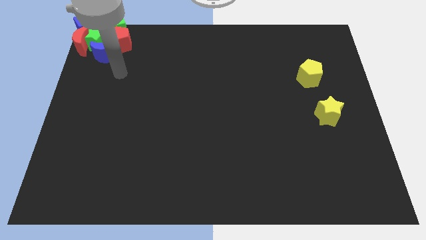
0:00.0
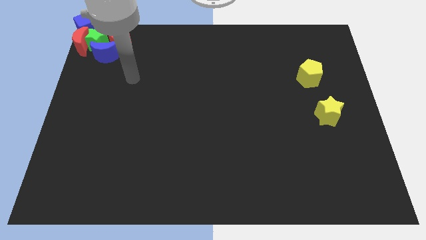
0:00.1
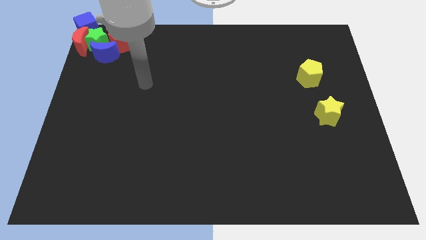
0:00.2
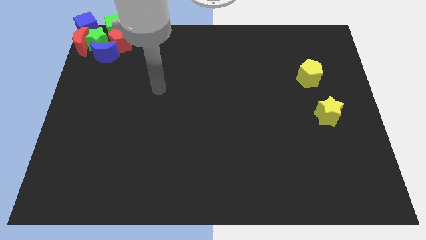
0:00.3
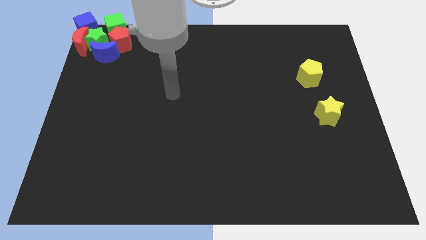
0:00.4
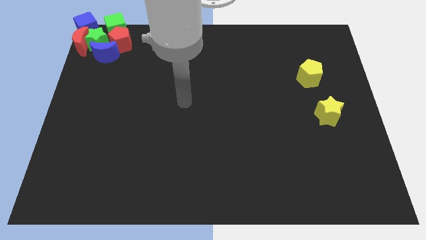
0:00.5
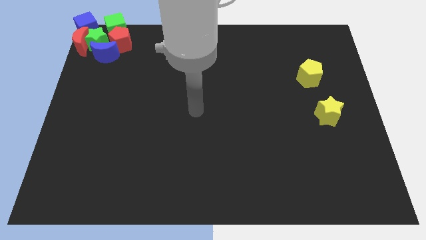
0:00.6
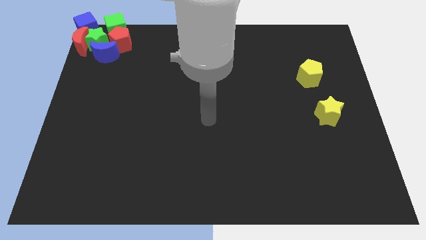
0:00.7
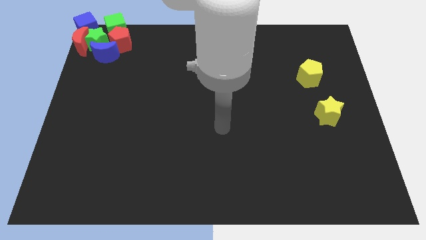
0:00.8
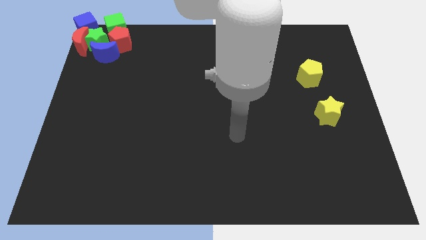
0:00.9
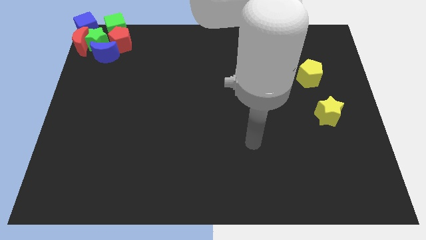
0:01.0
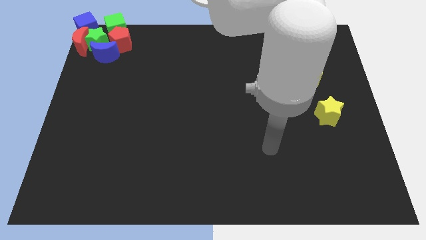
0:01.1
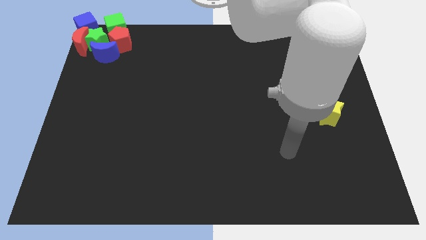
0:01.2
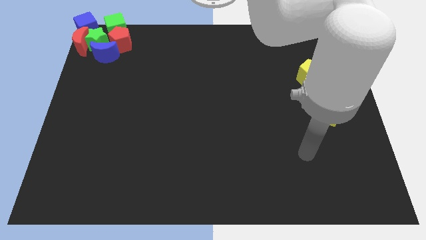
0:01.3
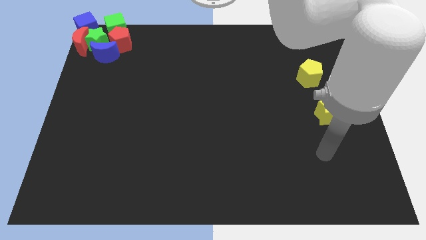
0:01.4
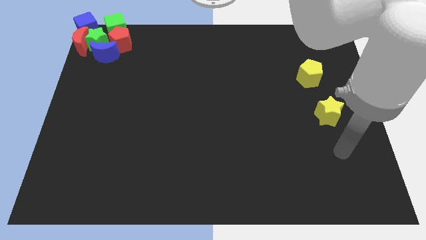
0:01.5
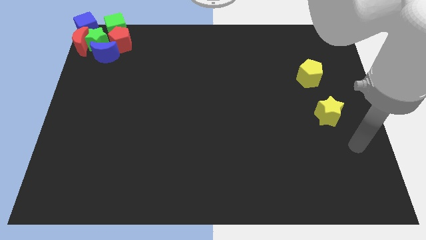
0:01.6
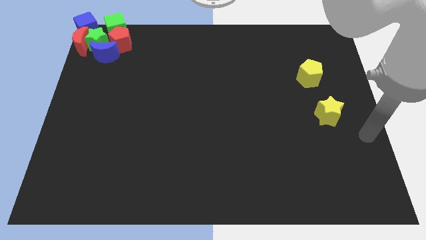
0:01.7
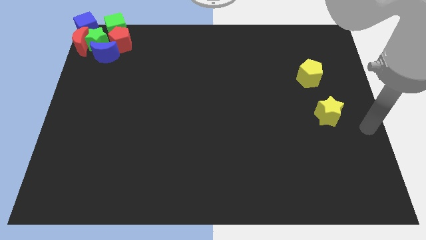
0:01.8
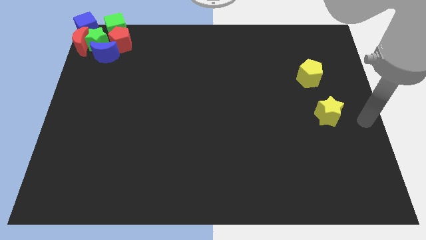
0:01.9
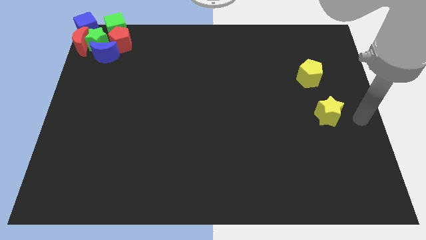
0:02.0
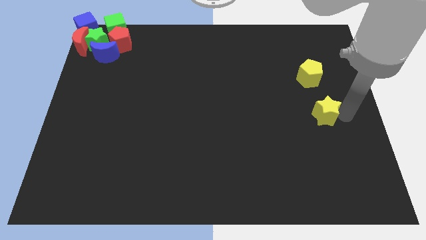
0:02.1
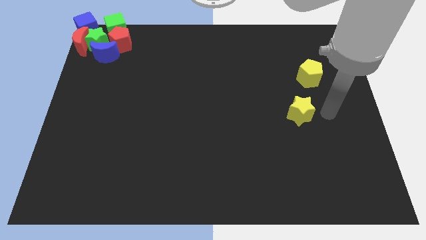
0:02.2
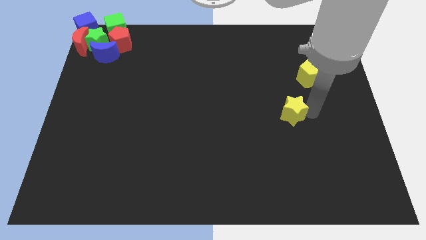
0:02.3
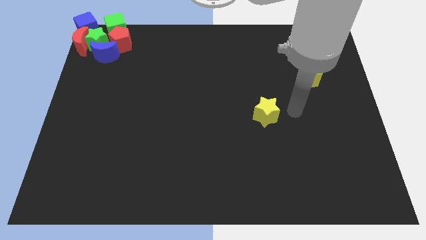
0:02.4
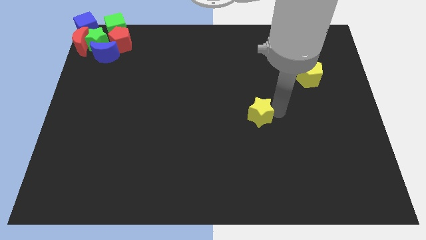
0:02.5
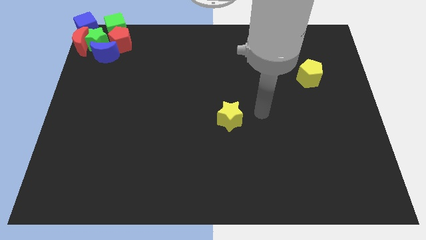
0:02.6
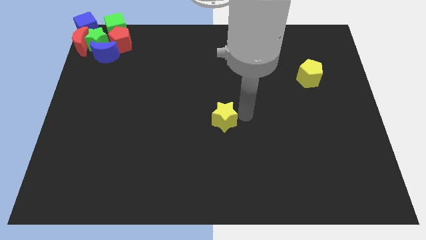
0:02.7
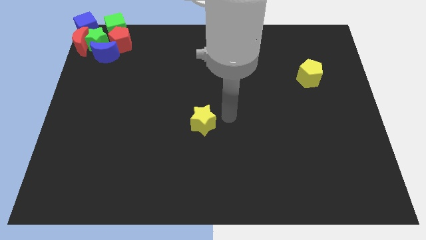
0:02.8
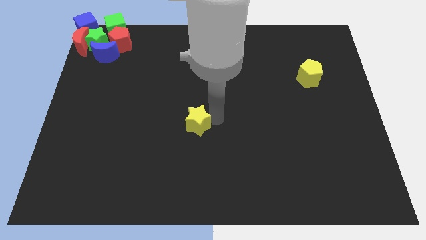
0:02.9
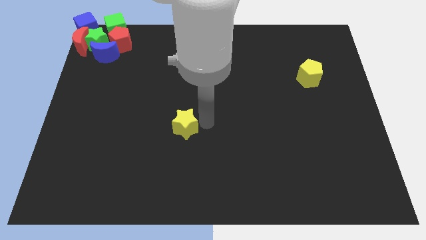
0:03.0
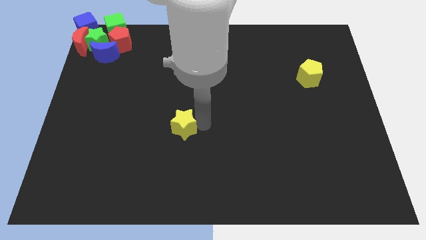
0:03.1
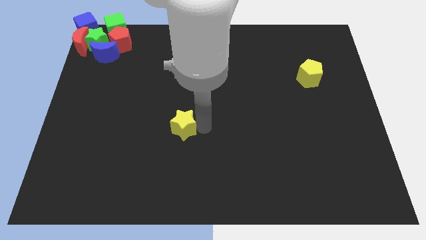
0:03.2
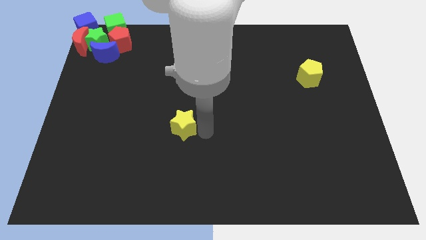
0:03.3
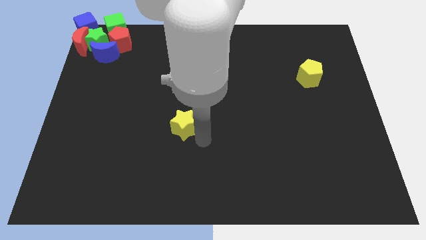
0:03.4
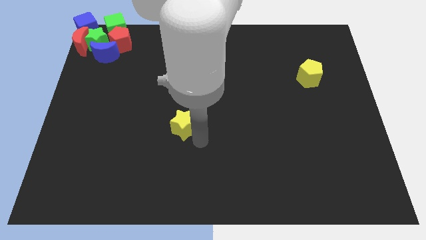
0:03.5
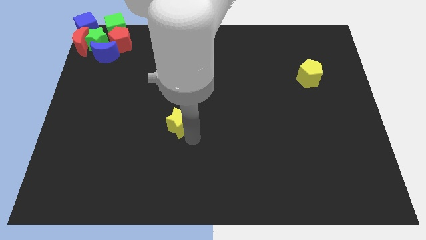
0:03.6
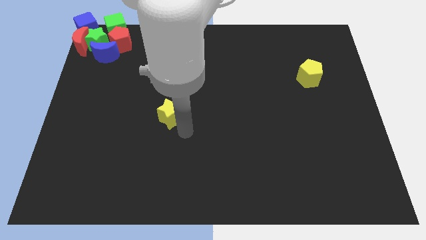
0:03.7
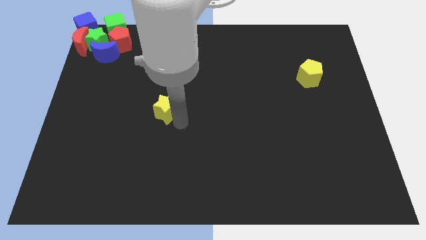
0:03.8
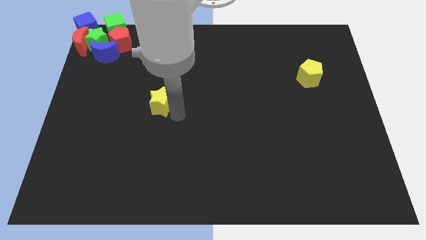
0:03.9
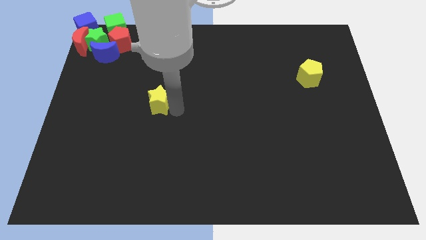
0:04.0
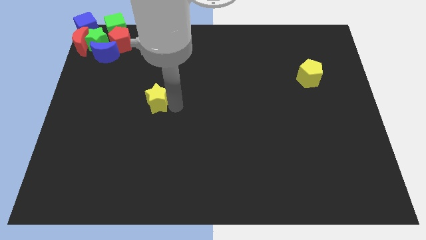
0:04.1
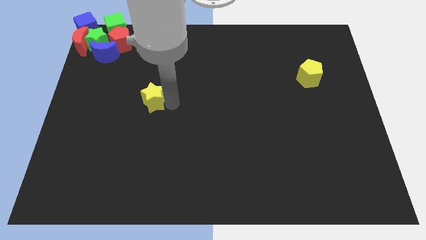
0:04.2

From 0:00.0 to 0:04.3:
slide the yellow star towards the group of blocks at the top left side of the board

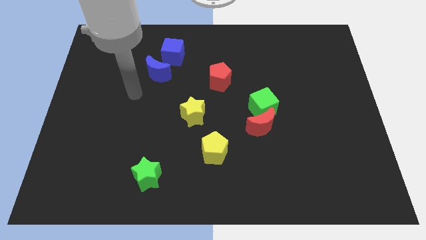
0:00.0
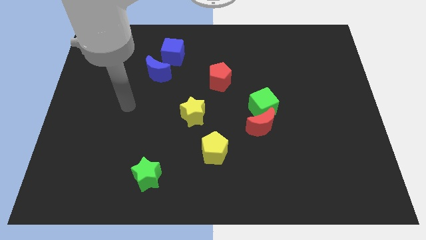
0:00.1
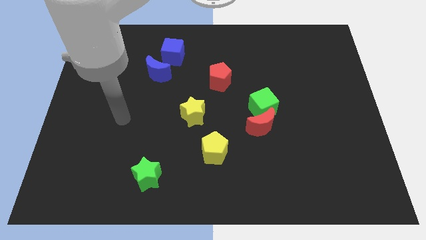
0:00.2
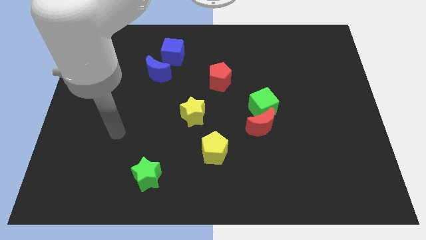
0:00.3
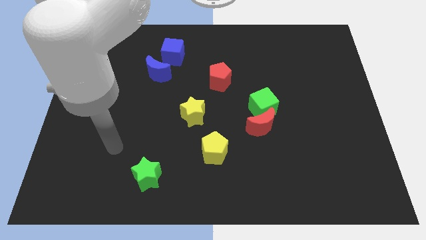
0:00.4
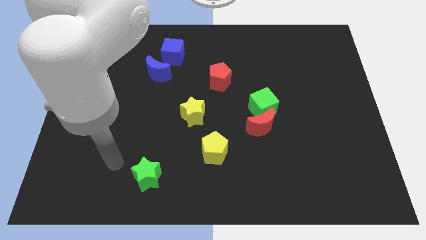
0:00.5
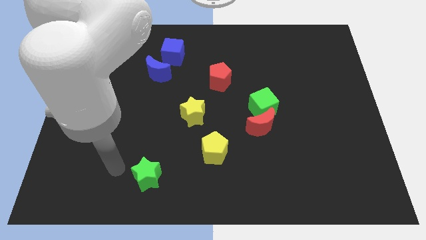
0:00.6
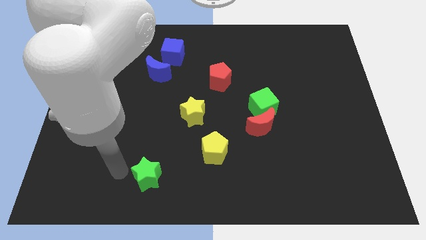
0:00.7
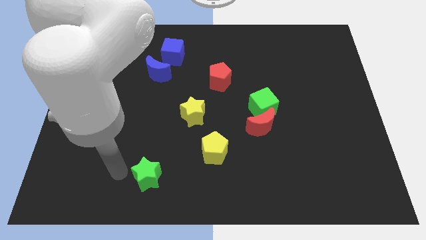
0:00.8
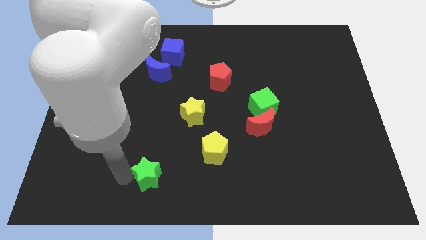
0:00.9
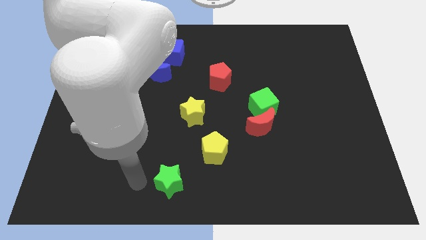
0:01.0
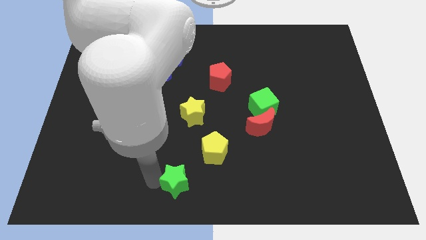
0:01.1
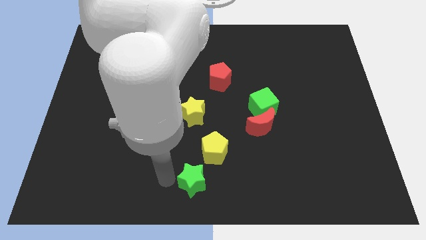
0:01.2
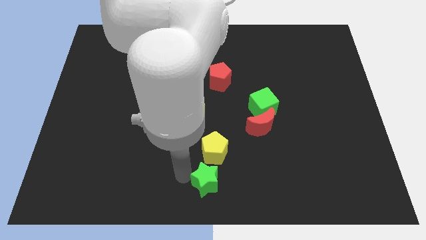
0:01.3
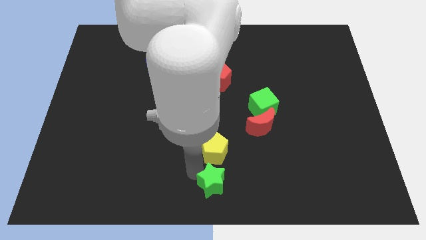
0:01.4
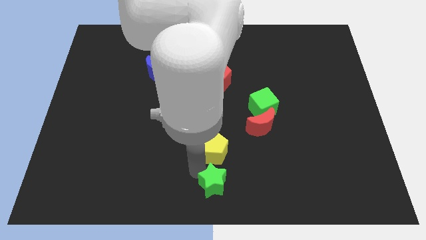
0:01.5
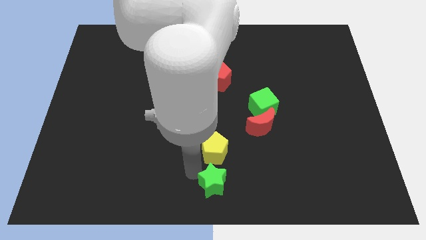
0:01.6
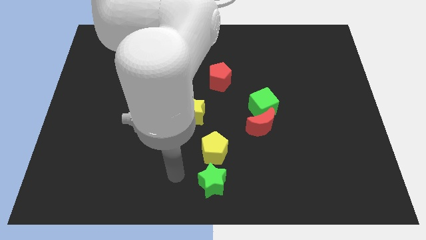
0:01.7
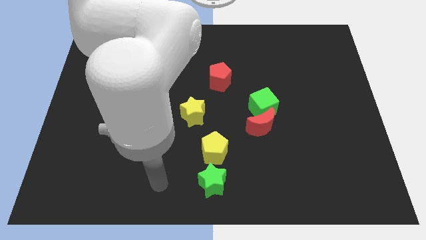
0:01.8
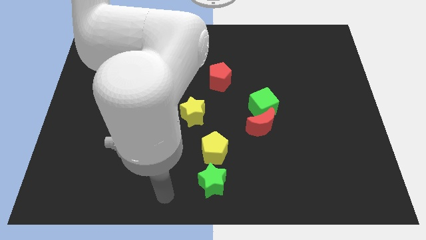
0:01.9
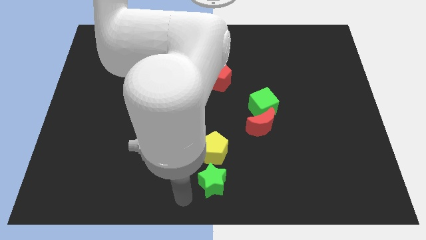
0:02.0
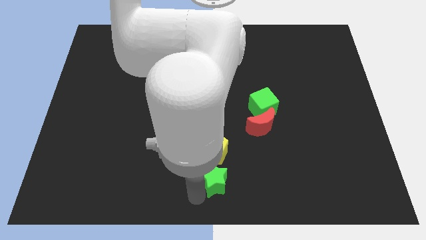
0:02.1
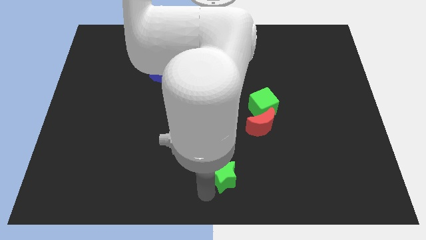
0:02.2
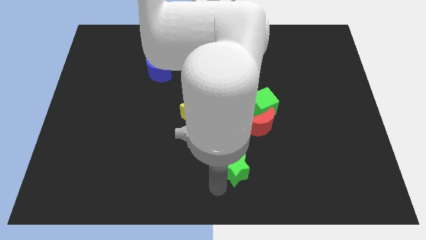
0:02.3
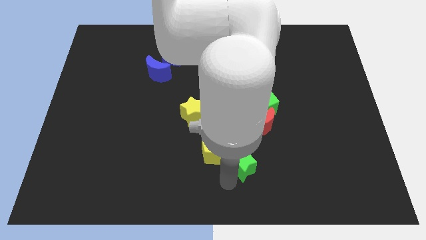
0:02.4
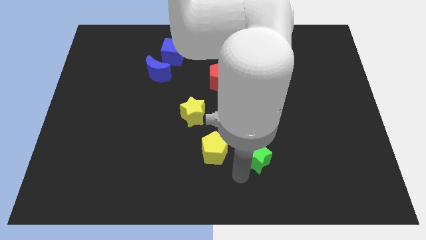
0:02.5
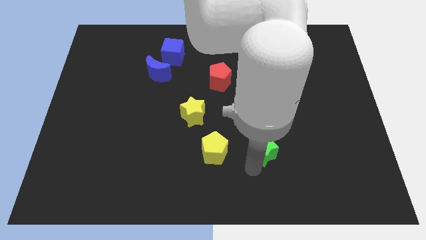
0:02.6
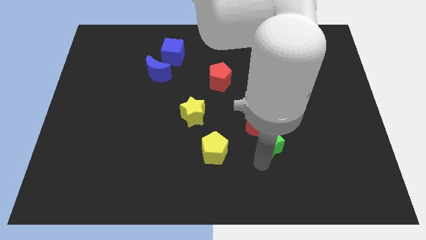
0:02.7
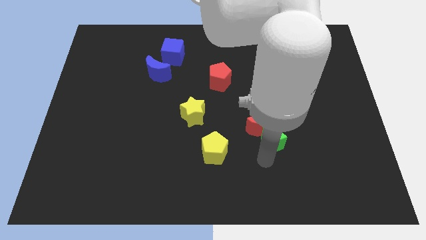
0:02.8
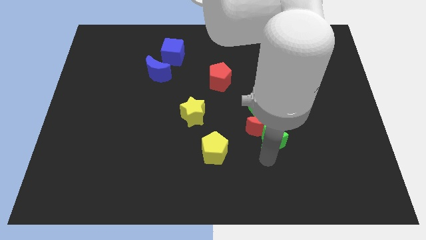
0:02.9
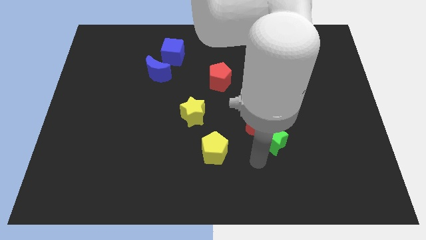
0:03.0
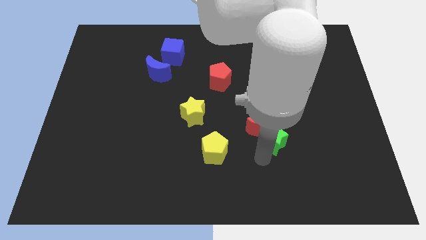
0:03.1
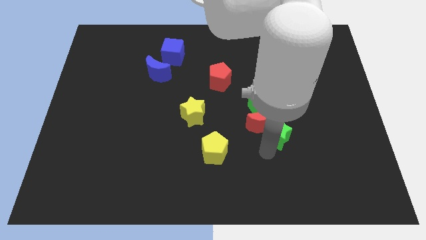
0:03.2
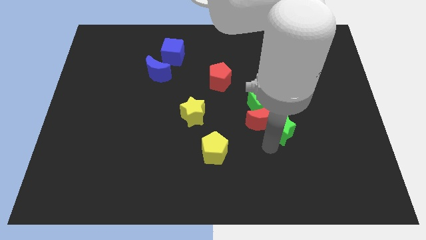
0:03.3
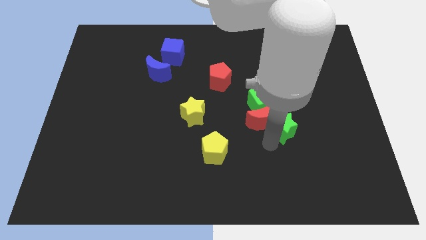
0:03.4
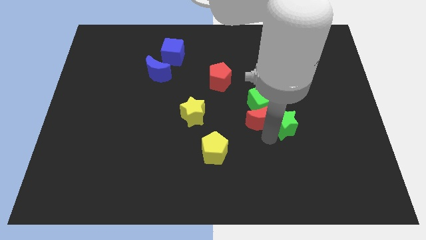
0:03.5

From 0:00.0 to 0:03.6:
push the green star below the red crescent

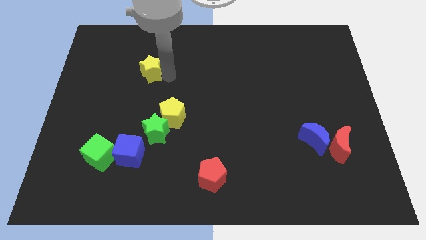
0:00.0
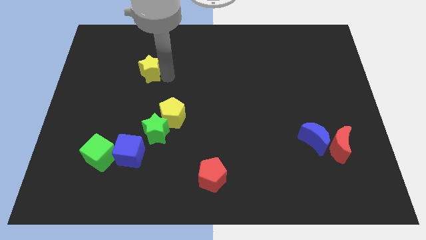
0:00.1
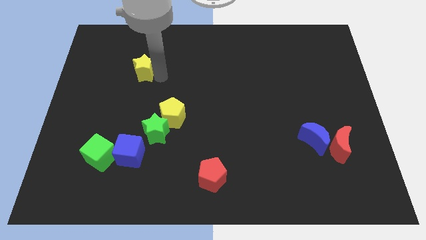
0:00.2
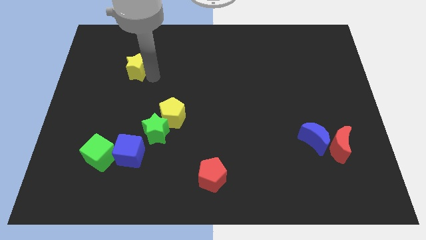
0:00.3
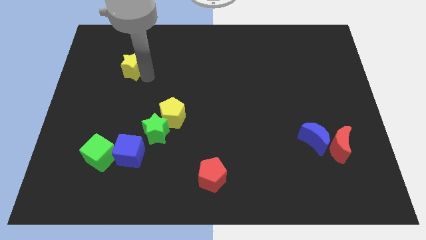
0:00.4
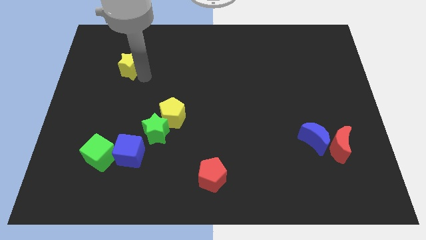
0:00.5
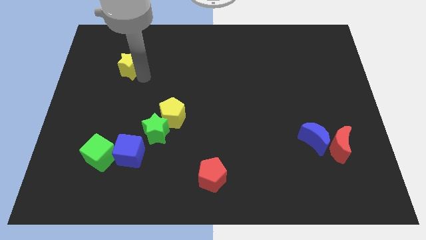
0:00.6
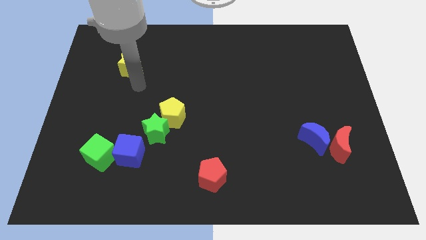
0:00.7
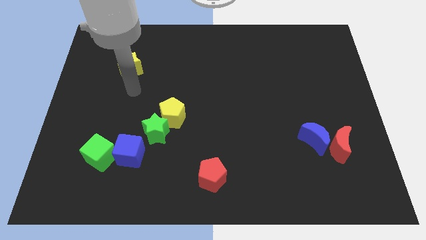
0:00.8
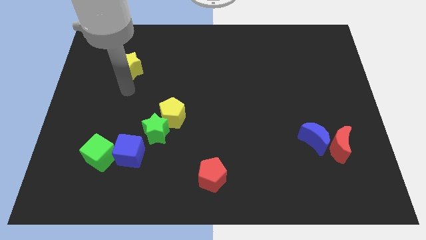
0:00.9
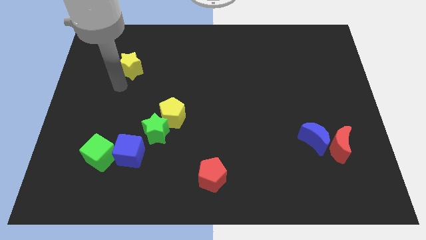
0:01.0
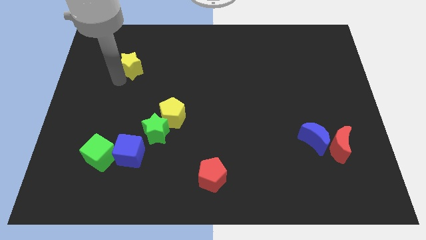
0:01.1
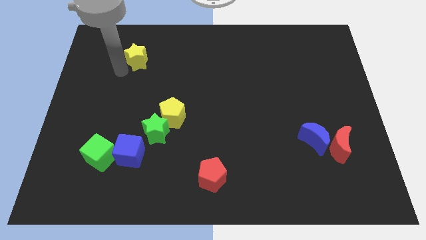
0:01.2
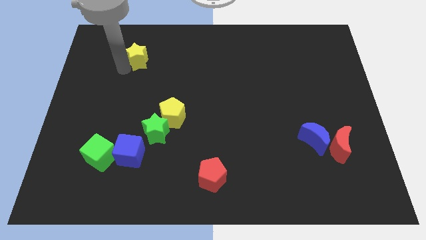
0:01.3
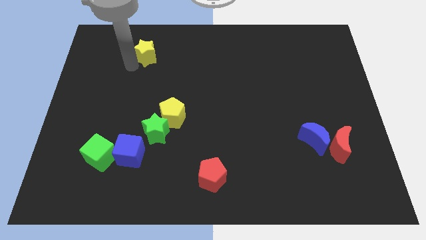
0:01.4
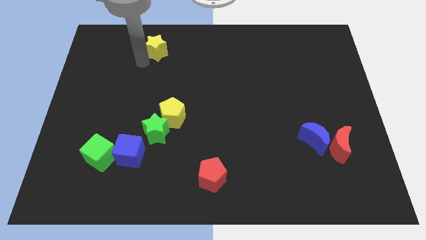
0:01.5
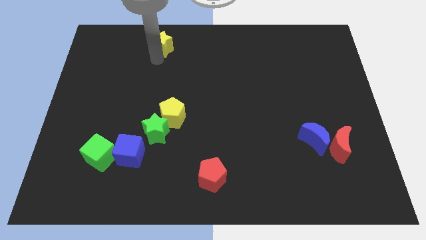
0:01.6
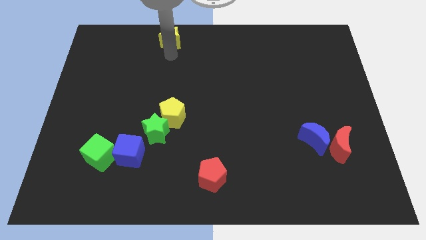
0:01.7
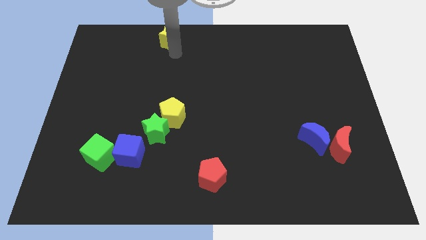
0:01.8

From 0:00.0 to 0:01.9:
move the yellow star upwards slightly to the top center of the board
